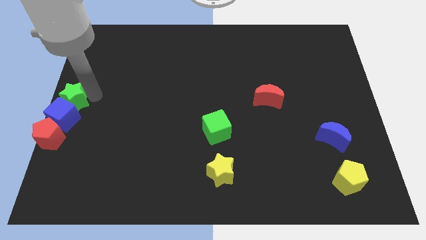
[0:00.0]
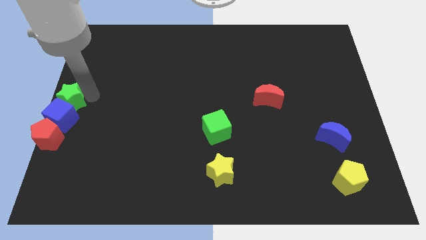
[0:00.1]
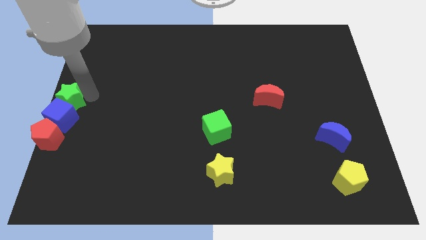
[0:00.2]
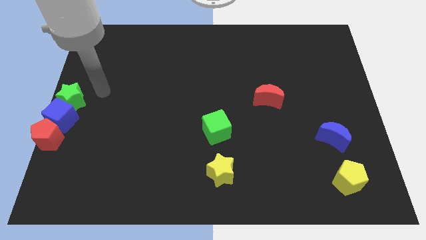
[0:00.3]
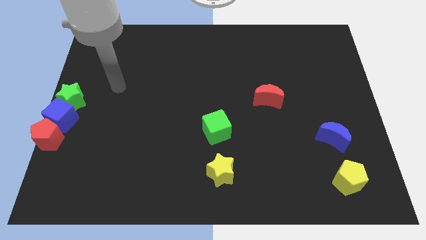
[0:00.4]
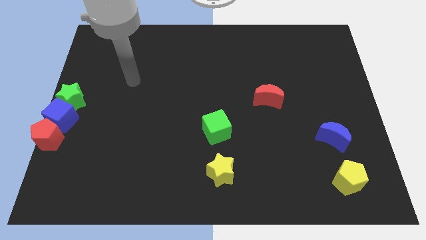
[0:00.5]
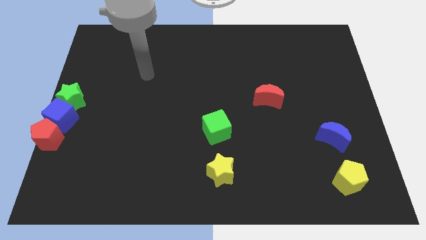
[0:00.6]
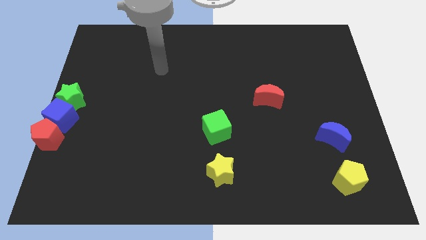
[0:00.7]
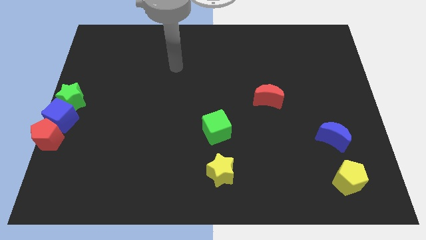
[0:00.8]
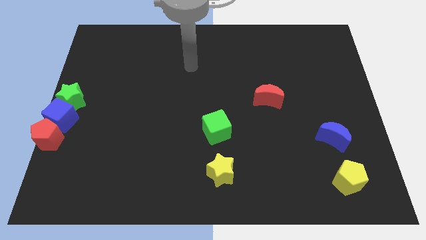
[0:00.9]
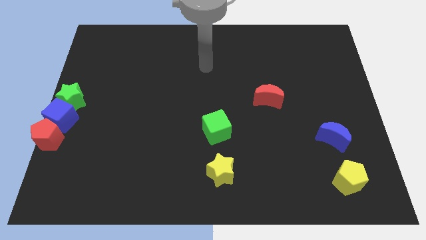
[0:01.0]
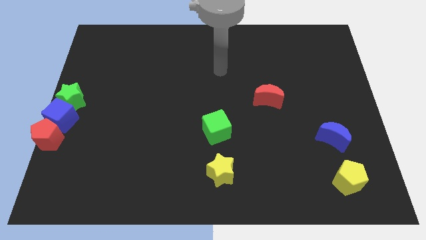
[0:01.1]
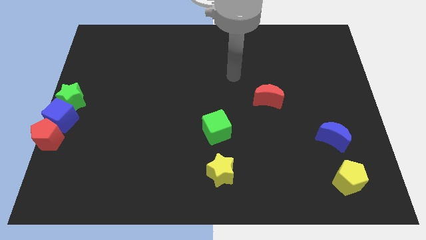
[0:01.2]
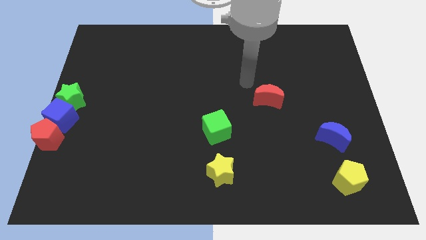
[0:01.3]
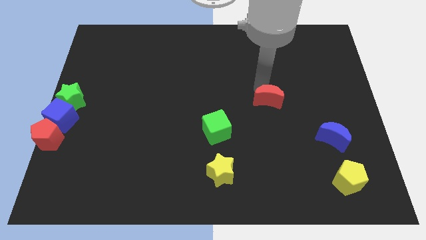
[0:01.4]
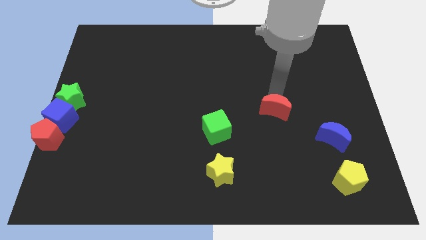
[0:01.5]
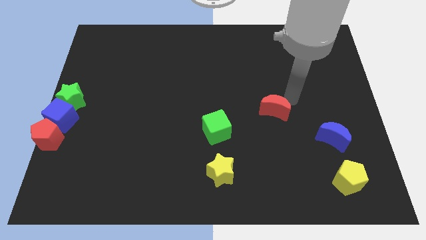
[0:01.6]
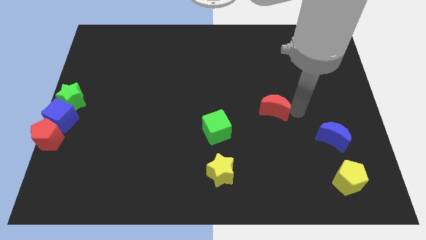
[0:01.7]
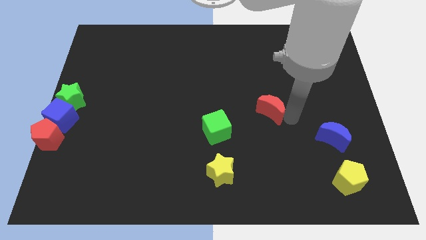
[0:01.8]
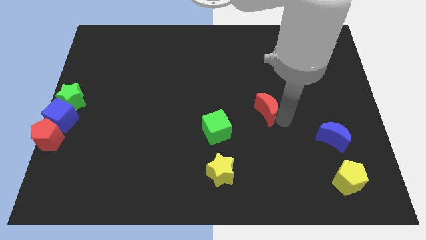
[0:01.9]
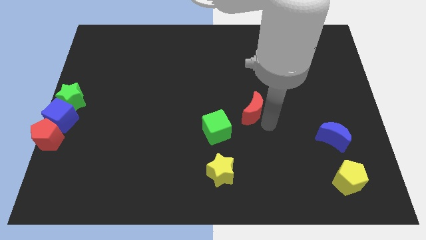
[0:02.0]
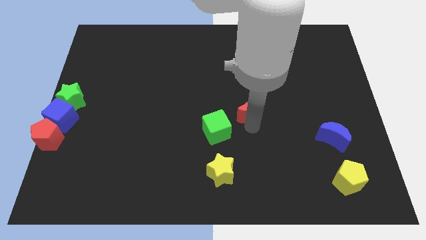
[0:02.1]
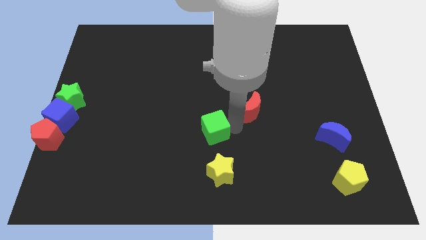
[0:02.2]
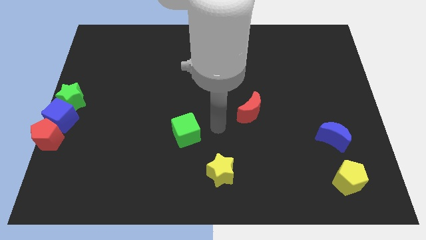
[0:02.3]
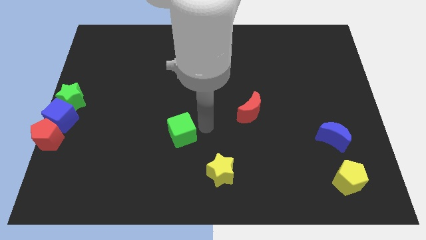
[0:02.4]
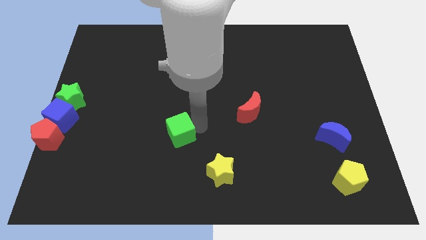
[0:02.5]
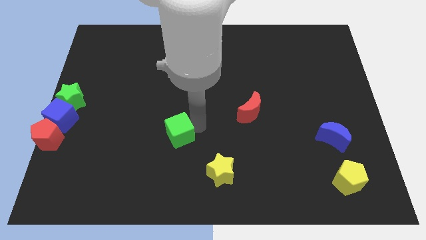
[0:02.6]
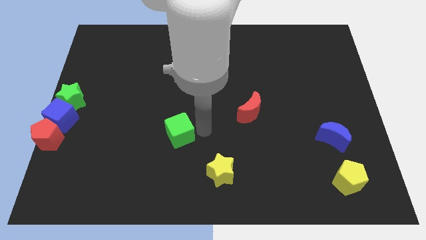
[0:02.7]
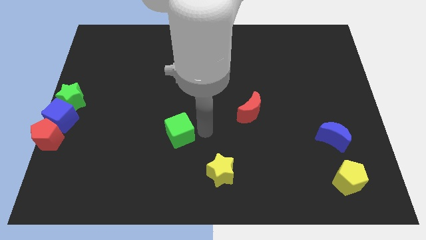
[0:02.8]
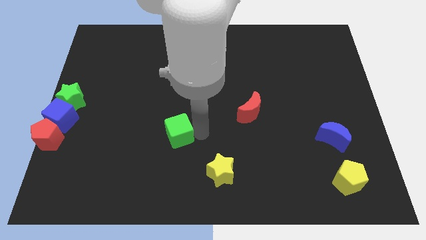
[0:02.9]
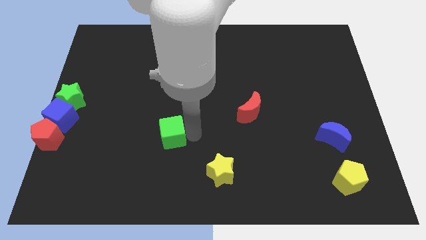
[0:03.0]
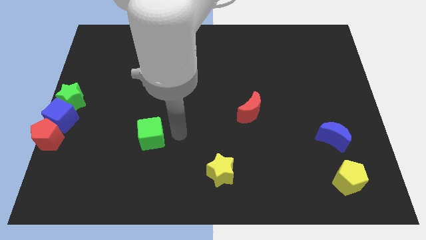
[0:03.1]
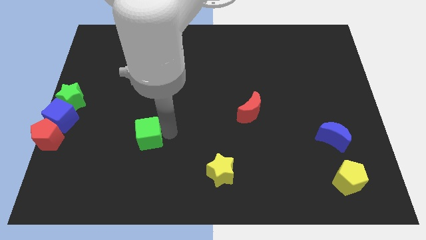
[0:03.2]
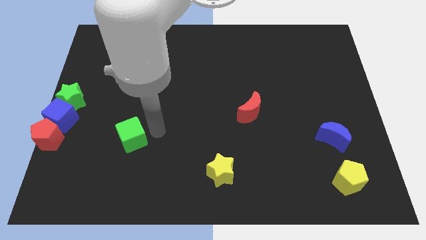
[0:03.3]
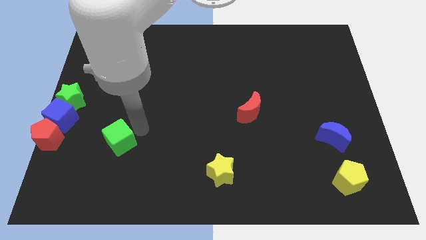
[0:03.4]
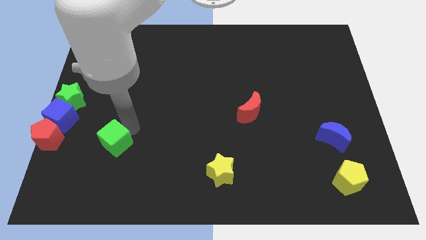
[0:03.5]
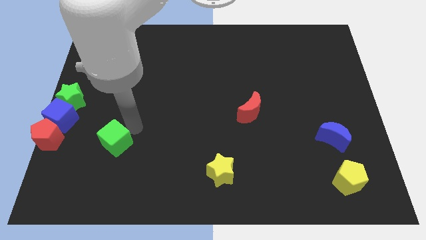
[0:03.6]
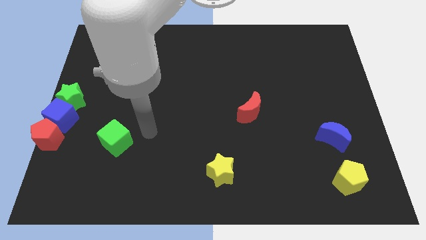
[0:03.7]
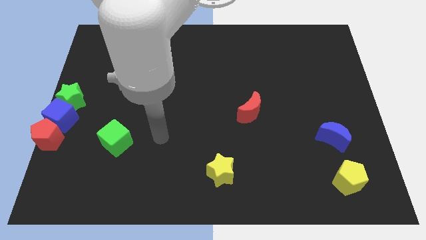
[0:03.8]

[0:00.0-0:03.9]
place green cube to the right of red pentagon

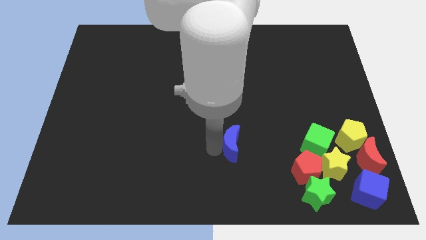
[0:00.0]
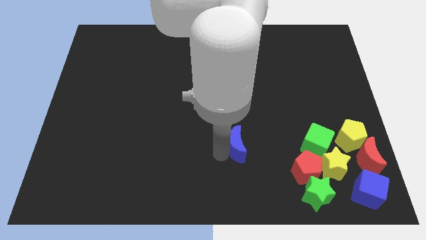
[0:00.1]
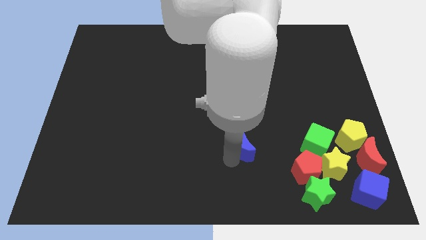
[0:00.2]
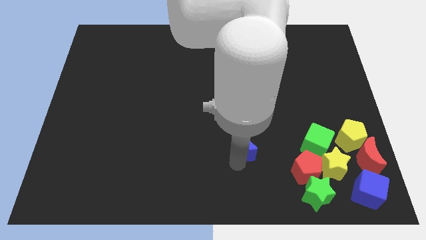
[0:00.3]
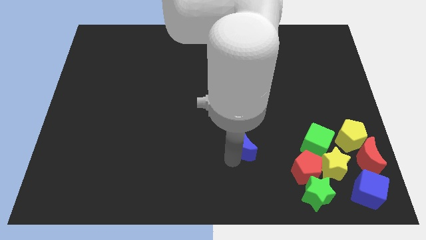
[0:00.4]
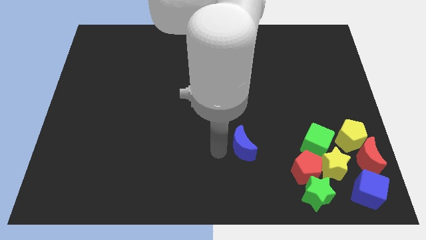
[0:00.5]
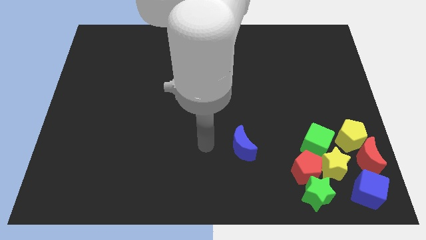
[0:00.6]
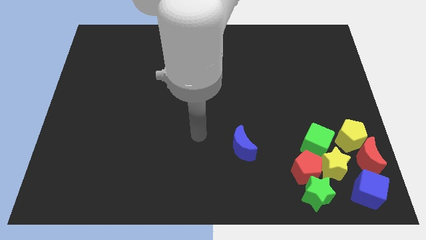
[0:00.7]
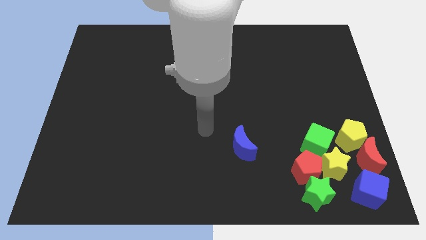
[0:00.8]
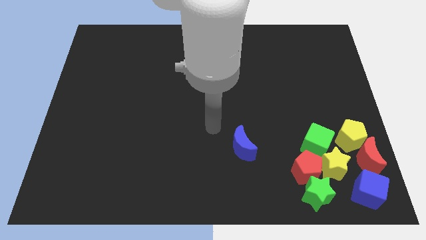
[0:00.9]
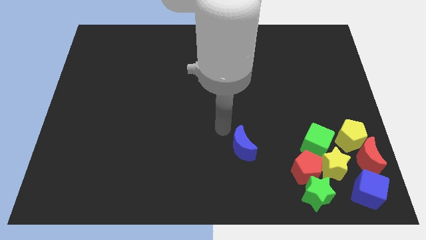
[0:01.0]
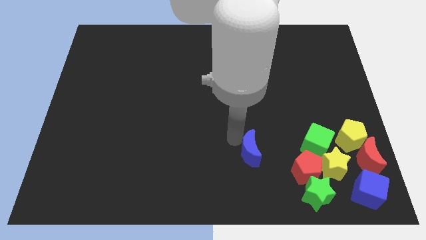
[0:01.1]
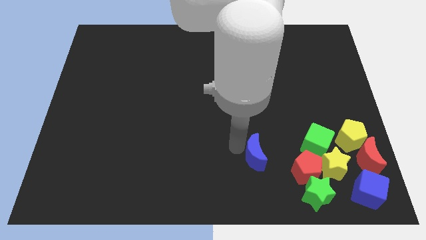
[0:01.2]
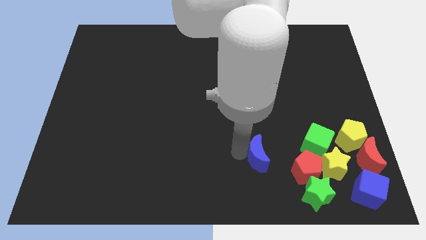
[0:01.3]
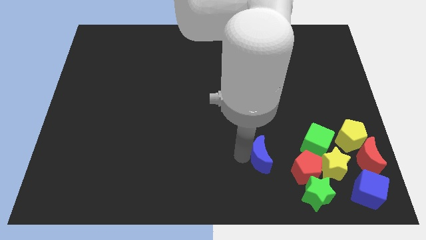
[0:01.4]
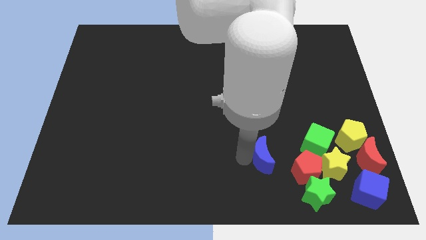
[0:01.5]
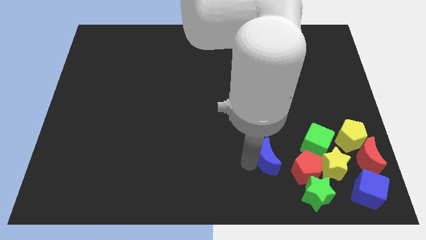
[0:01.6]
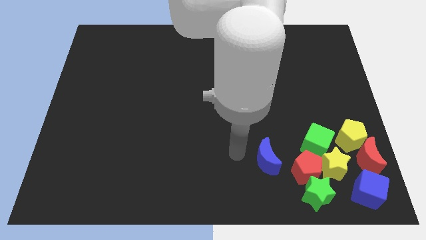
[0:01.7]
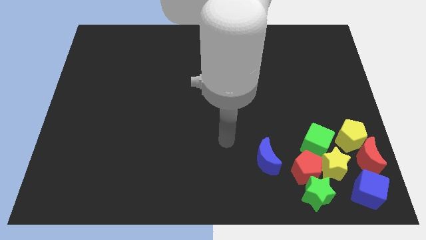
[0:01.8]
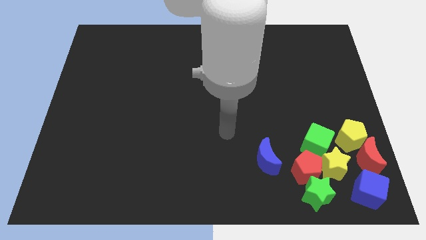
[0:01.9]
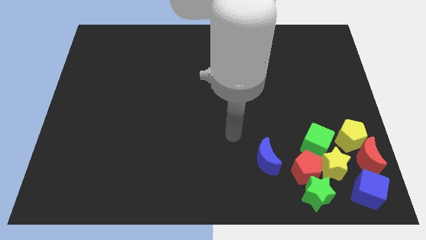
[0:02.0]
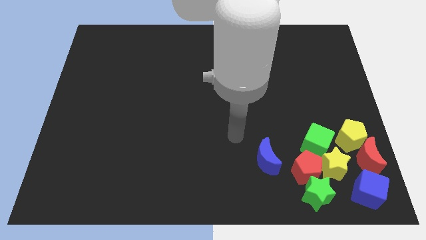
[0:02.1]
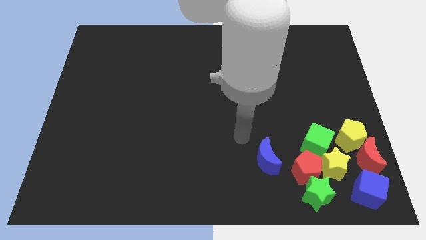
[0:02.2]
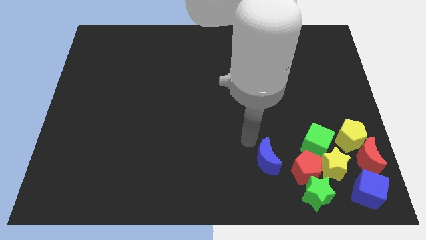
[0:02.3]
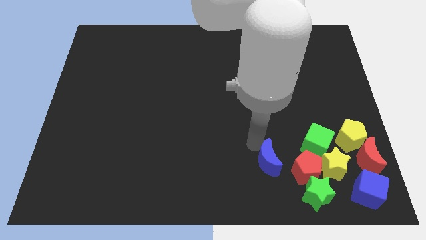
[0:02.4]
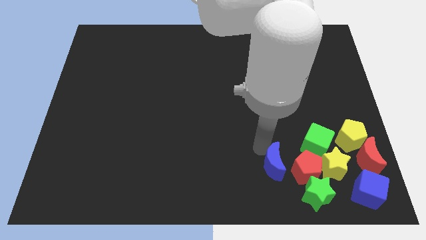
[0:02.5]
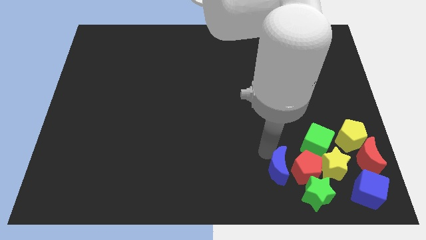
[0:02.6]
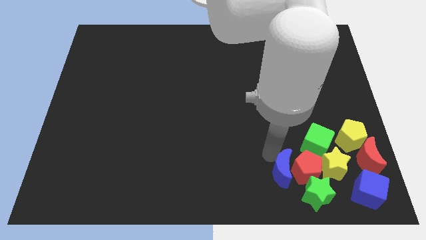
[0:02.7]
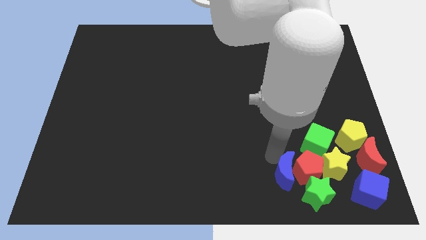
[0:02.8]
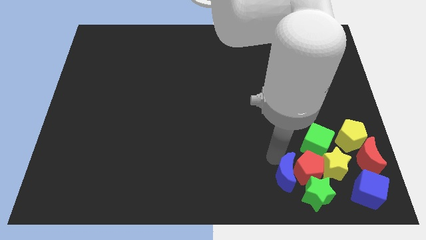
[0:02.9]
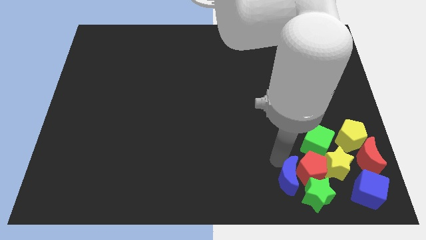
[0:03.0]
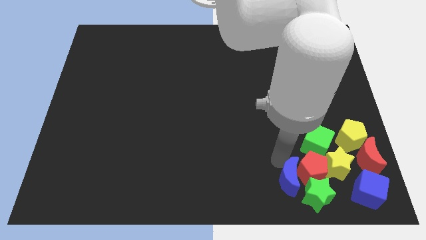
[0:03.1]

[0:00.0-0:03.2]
move the blue crescent to the left of the red pentagon

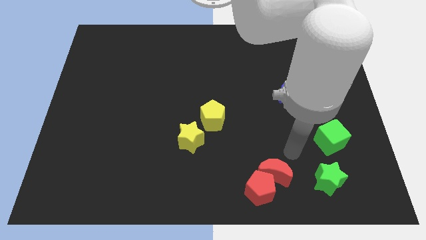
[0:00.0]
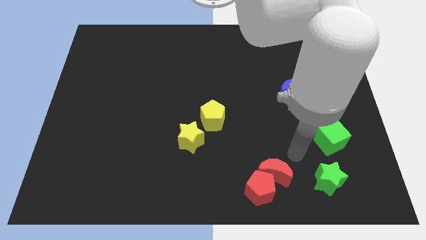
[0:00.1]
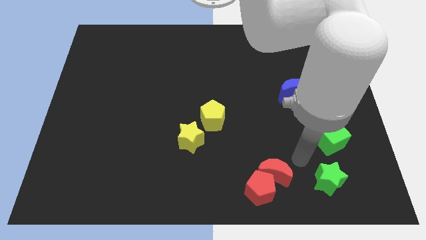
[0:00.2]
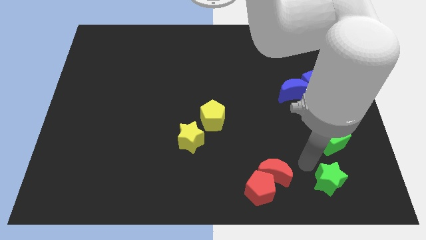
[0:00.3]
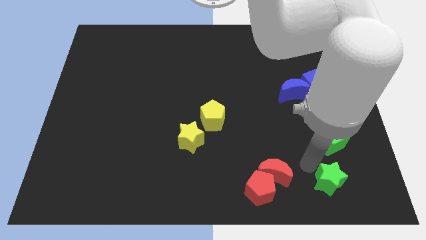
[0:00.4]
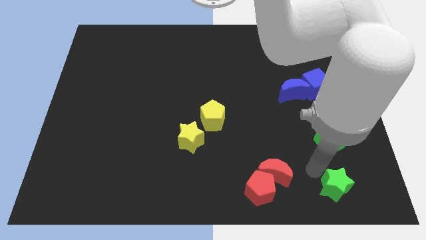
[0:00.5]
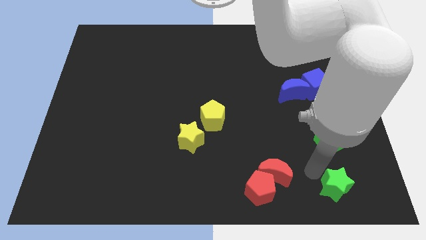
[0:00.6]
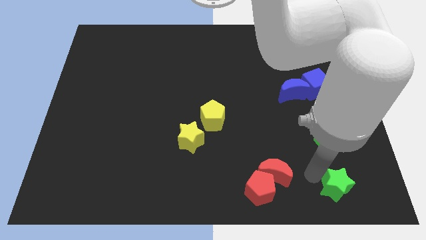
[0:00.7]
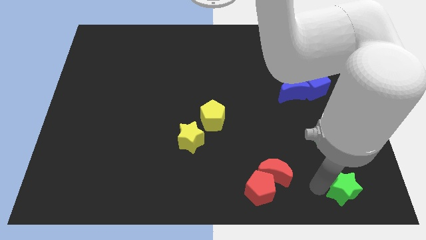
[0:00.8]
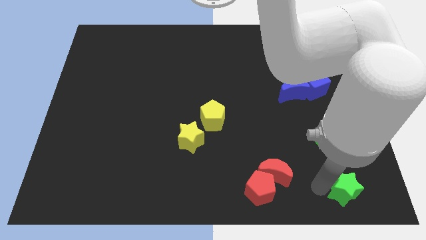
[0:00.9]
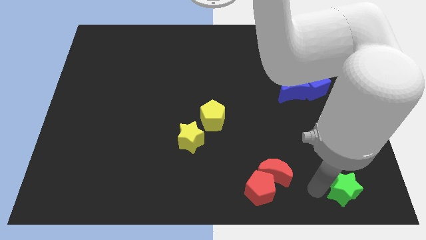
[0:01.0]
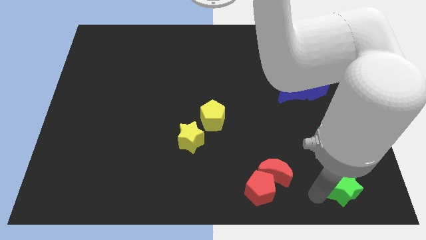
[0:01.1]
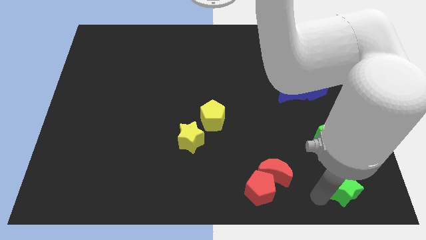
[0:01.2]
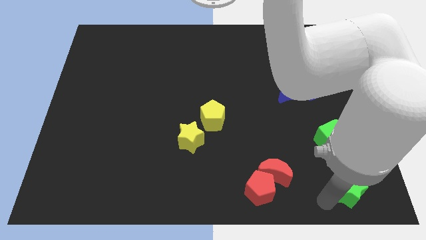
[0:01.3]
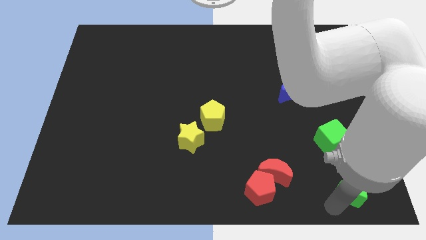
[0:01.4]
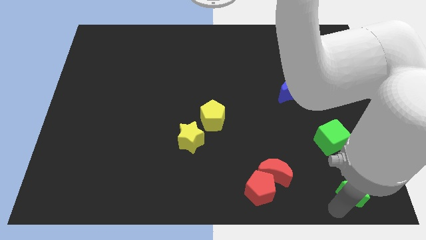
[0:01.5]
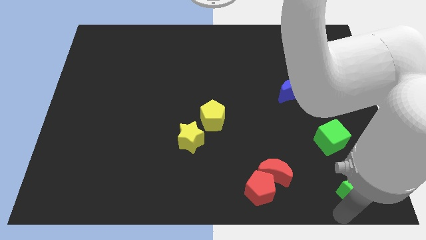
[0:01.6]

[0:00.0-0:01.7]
move the green star to the bottom right corner of the board

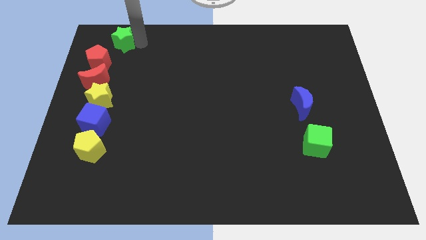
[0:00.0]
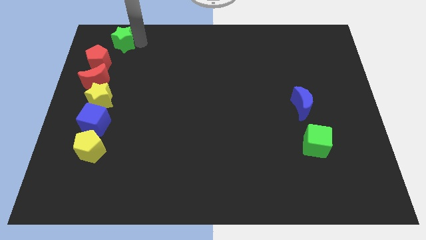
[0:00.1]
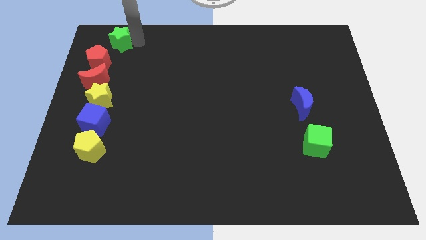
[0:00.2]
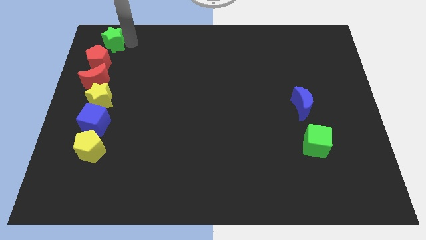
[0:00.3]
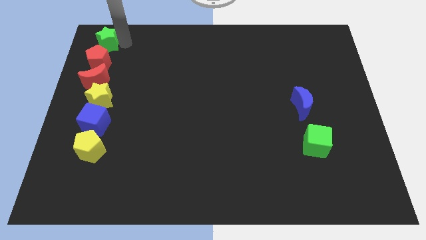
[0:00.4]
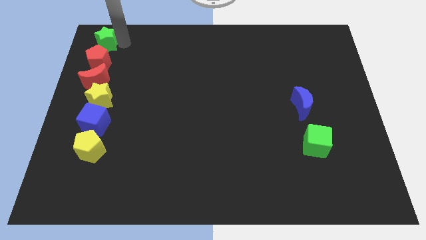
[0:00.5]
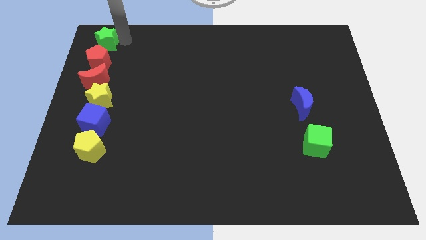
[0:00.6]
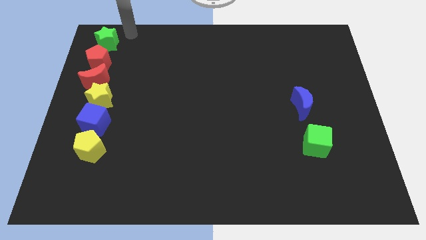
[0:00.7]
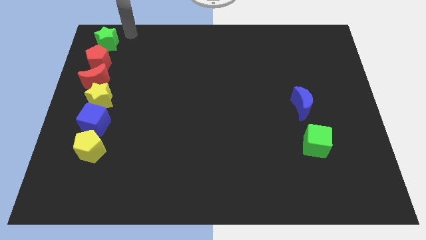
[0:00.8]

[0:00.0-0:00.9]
place the green star above the red pentagon
